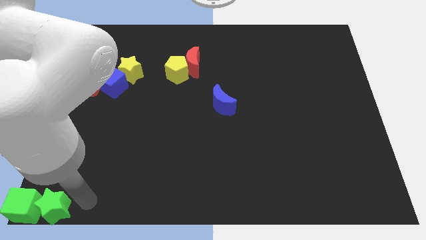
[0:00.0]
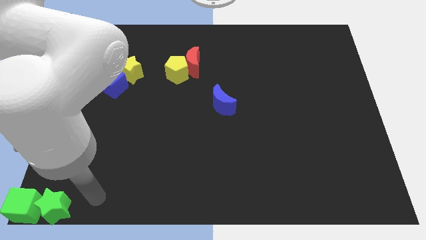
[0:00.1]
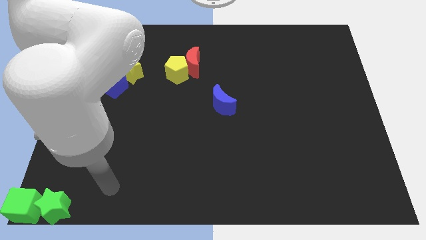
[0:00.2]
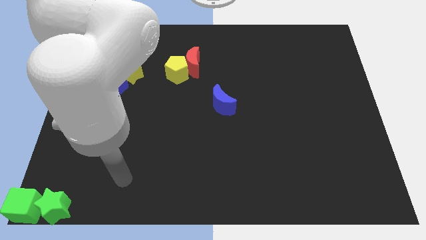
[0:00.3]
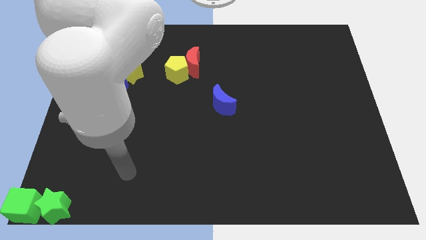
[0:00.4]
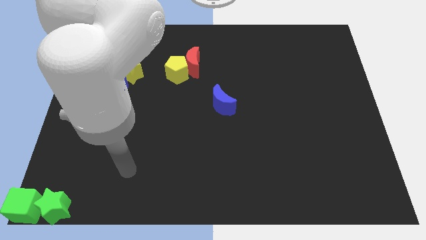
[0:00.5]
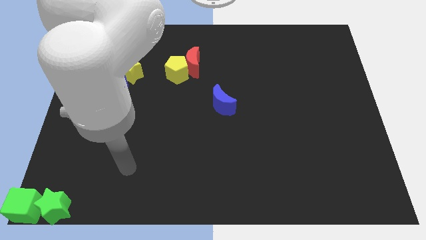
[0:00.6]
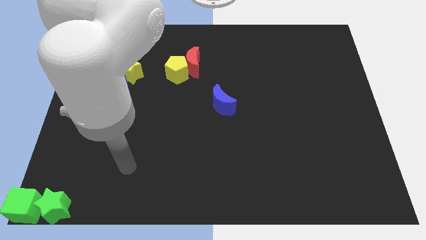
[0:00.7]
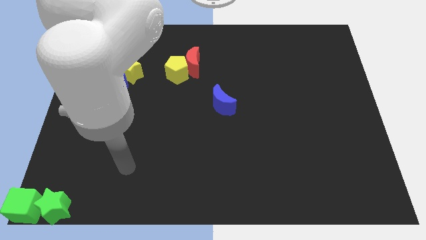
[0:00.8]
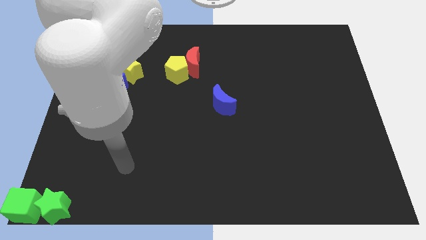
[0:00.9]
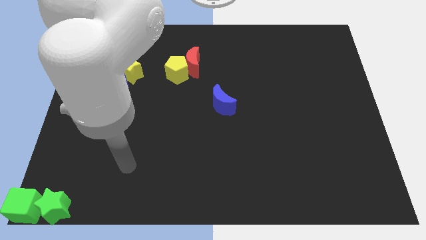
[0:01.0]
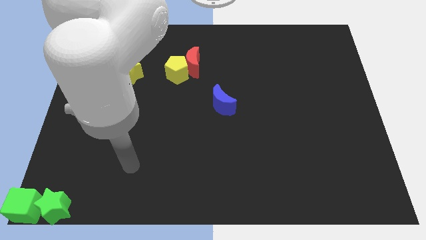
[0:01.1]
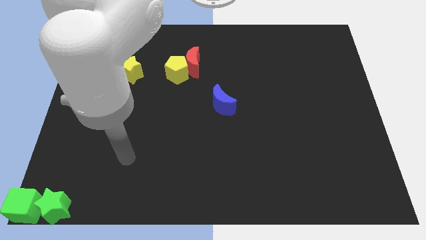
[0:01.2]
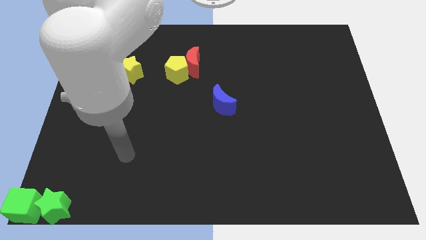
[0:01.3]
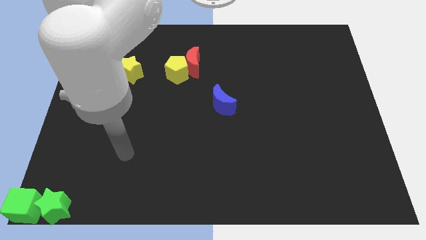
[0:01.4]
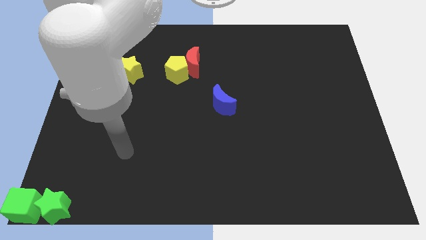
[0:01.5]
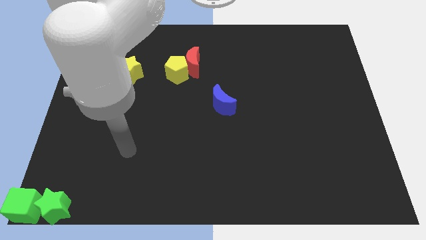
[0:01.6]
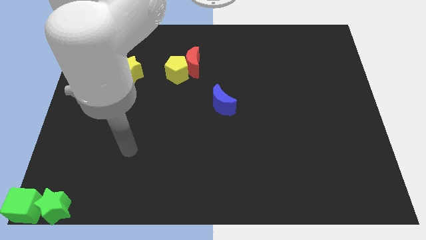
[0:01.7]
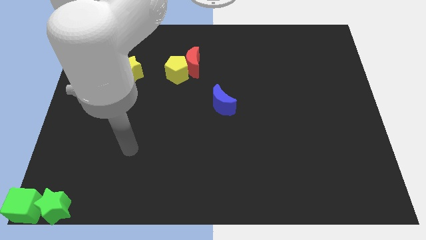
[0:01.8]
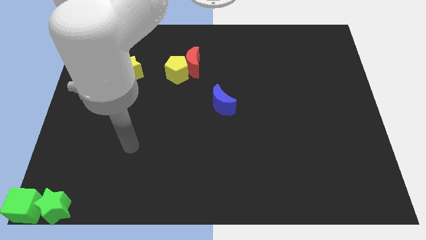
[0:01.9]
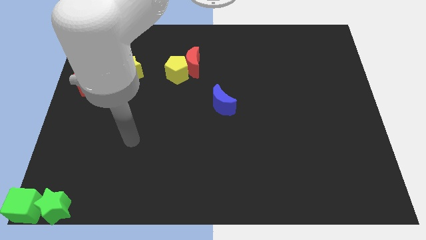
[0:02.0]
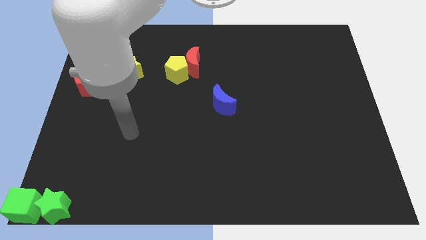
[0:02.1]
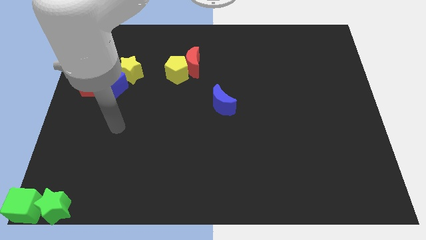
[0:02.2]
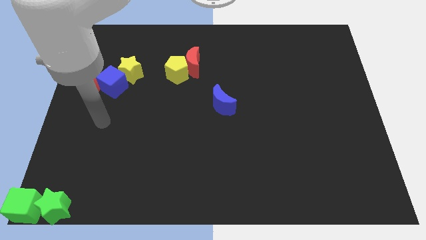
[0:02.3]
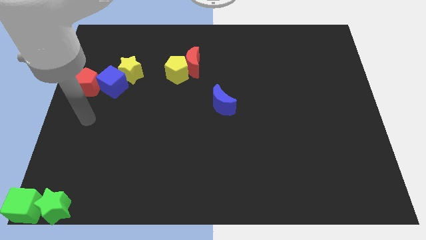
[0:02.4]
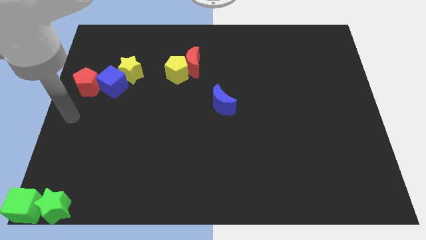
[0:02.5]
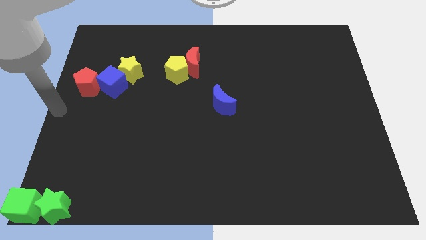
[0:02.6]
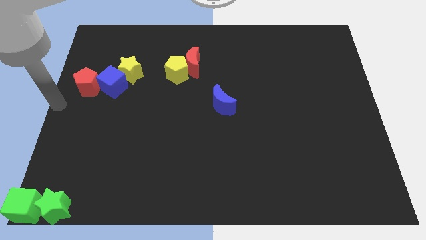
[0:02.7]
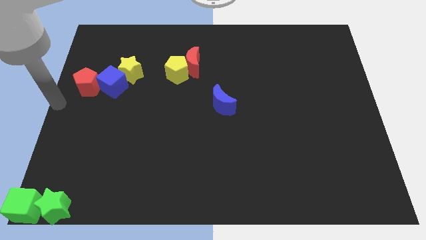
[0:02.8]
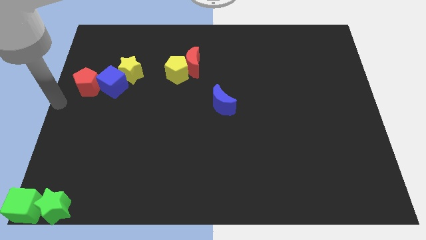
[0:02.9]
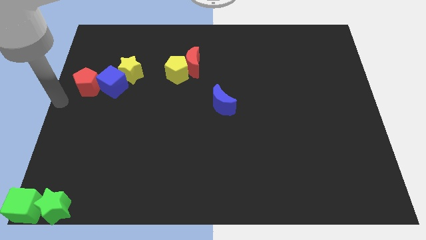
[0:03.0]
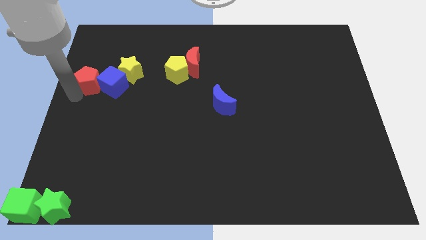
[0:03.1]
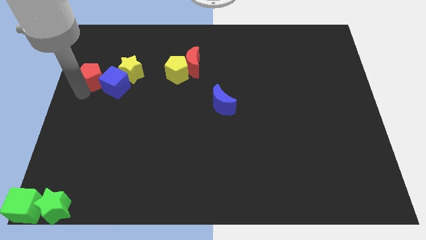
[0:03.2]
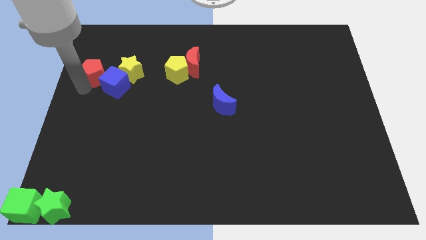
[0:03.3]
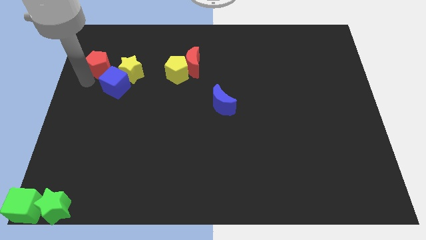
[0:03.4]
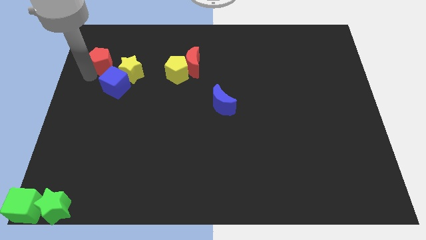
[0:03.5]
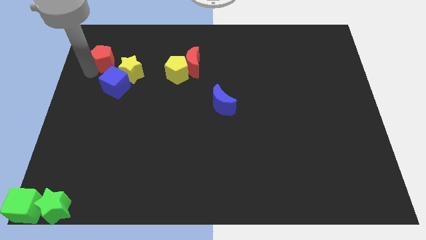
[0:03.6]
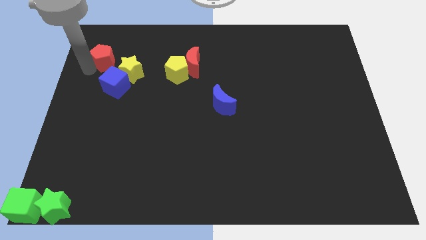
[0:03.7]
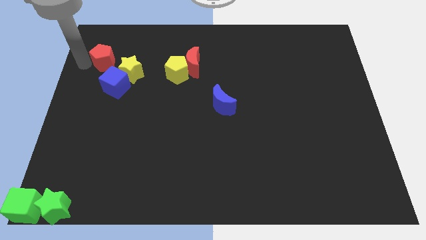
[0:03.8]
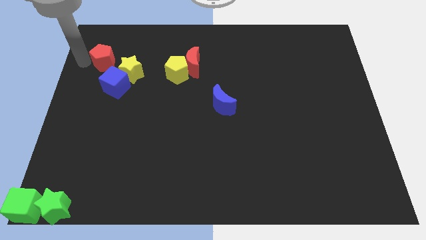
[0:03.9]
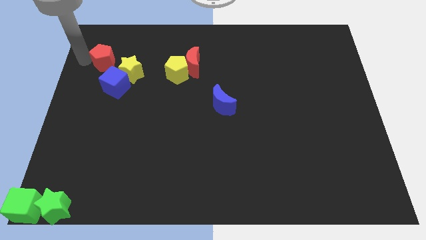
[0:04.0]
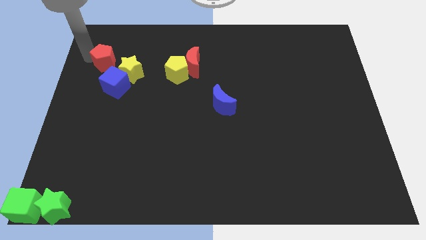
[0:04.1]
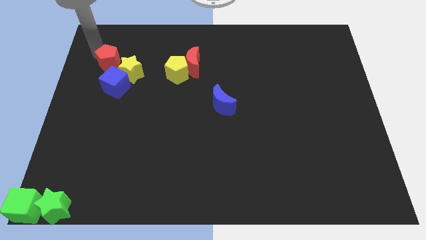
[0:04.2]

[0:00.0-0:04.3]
separate the red pentagon from the blue cube

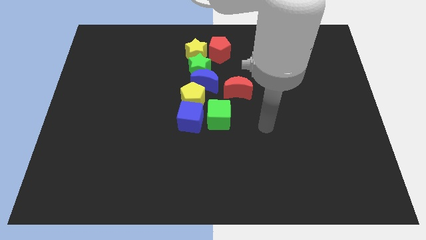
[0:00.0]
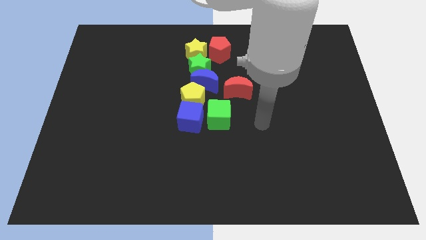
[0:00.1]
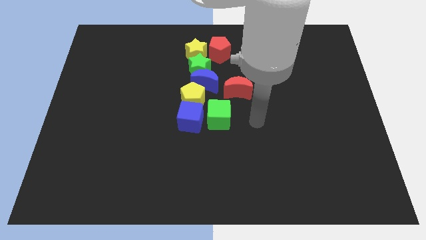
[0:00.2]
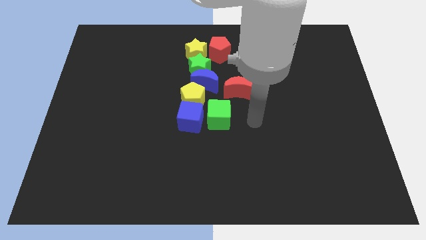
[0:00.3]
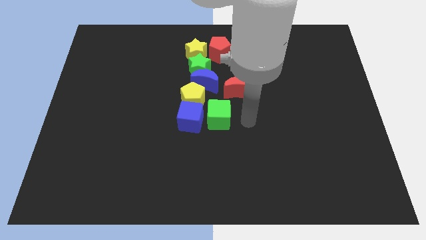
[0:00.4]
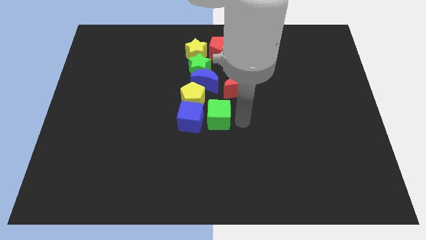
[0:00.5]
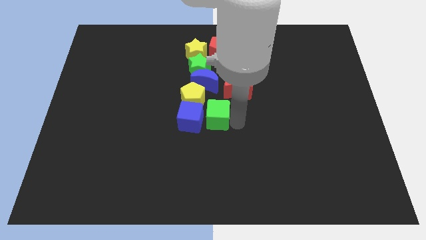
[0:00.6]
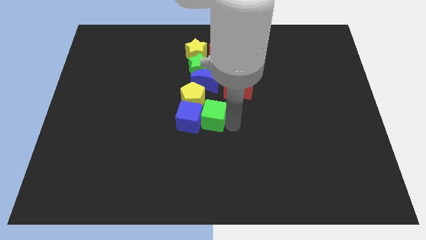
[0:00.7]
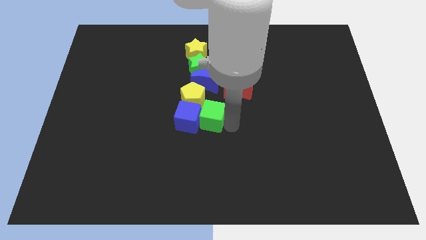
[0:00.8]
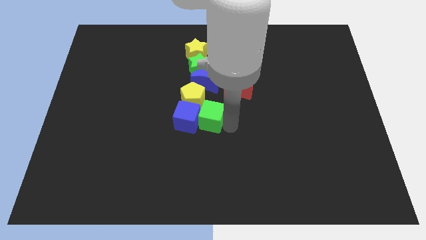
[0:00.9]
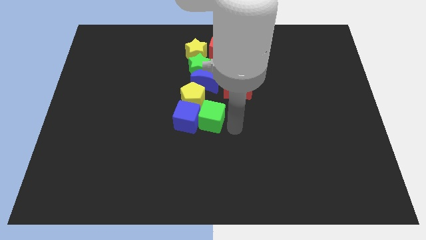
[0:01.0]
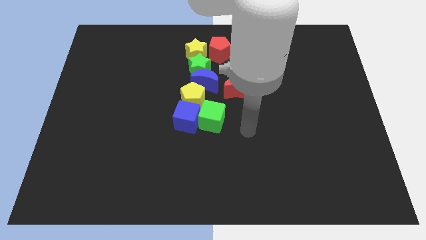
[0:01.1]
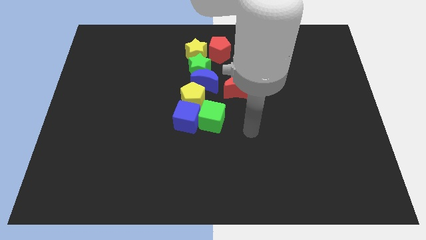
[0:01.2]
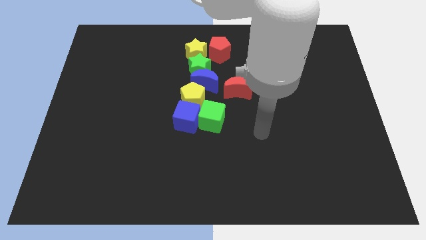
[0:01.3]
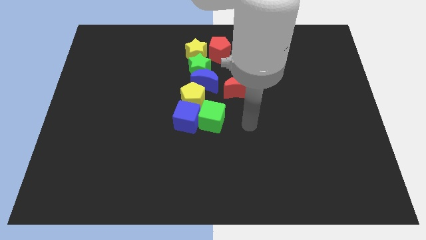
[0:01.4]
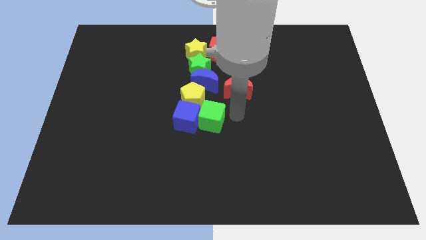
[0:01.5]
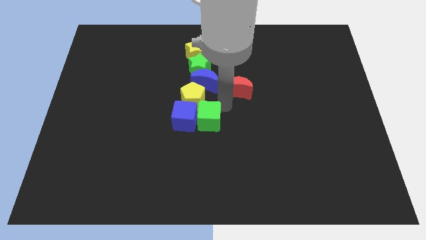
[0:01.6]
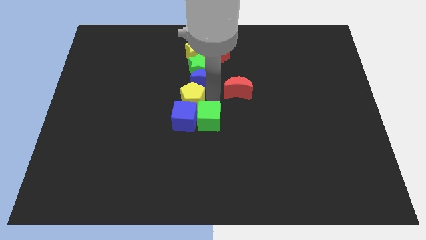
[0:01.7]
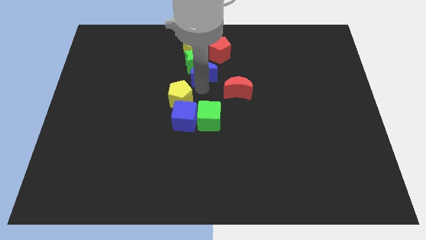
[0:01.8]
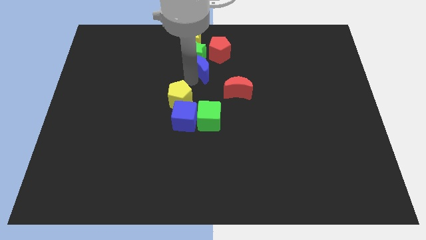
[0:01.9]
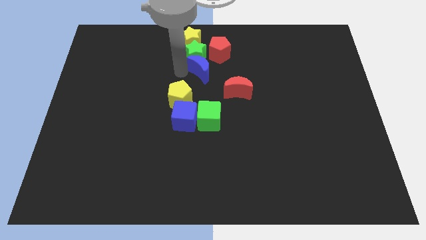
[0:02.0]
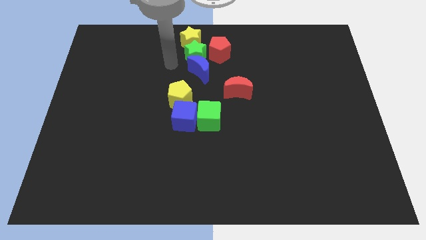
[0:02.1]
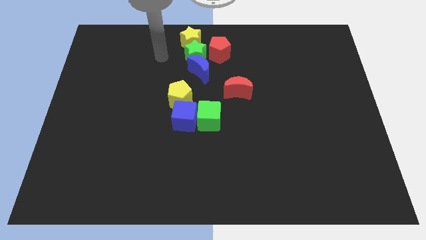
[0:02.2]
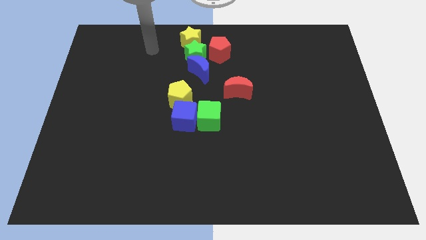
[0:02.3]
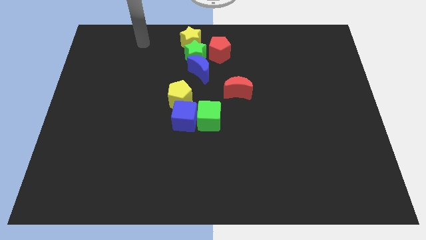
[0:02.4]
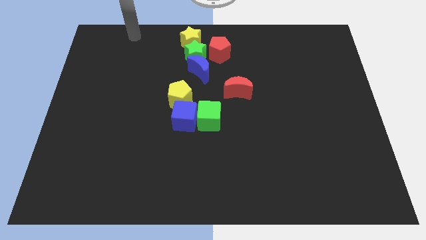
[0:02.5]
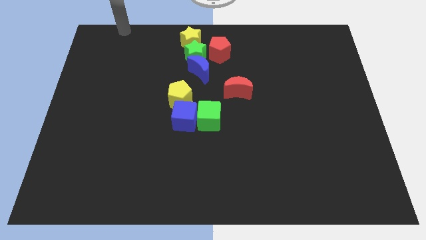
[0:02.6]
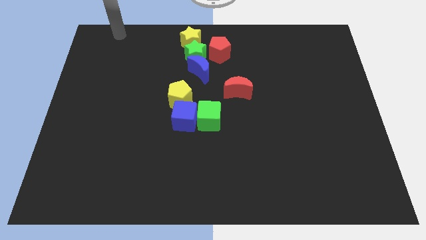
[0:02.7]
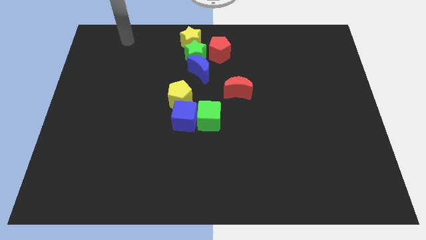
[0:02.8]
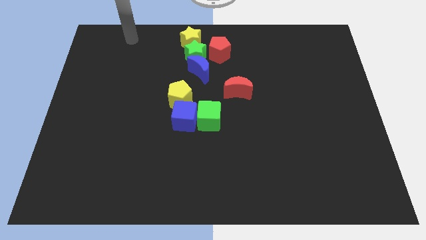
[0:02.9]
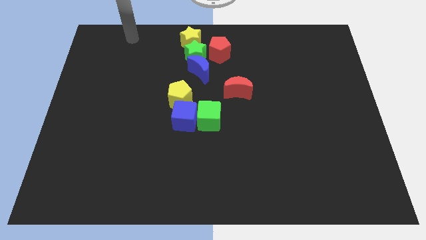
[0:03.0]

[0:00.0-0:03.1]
touch blue cube with green cube

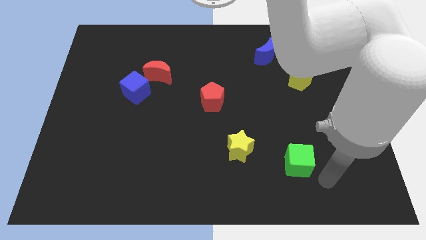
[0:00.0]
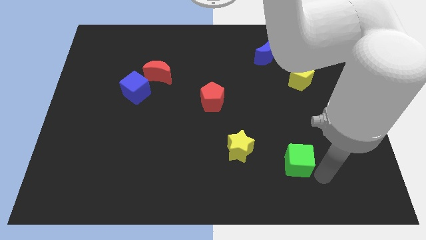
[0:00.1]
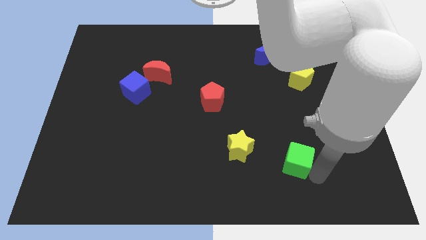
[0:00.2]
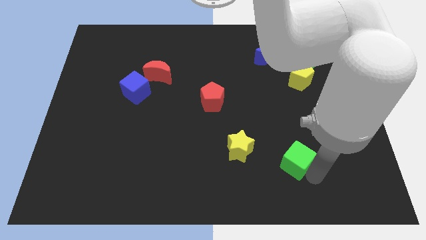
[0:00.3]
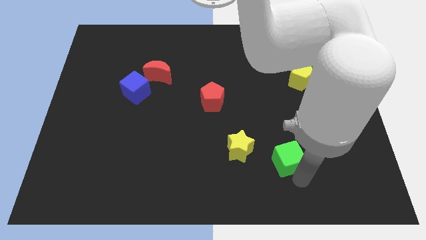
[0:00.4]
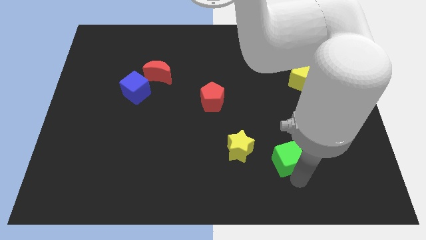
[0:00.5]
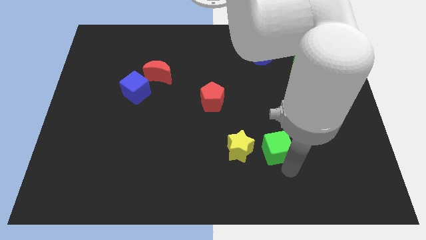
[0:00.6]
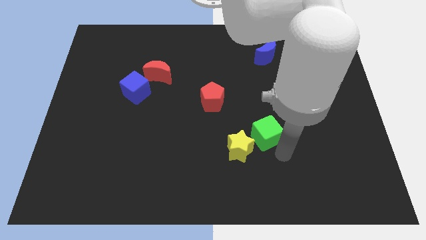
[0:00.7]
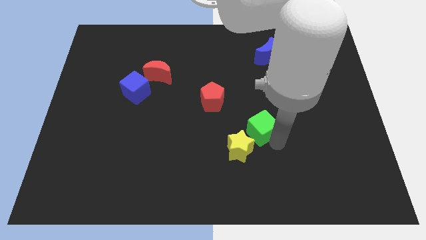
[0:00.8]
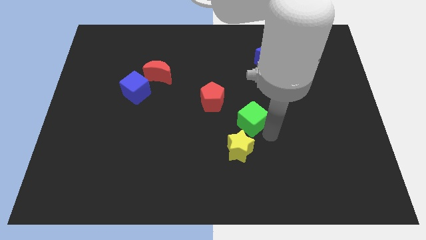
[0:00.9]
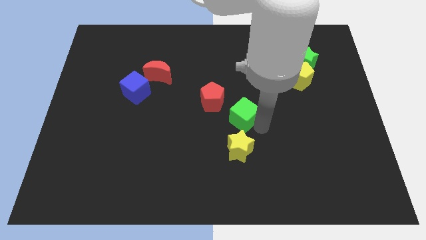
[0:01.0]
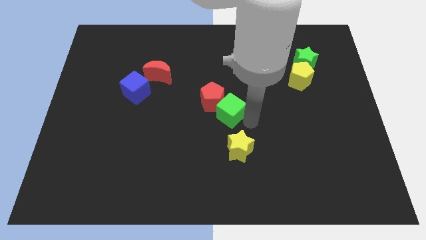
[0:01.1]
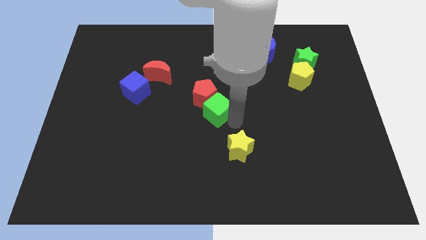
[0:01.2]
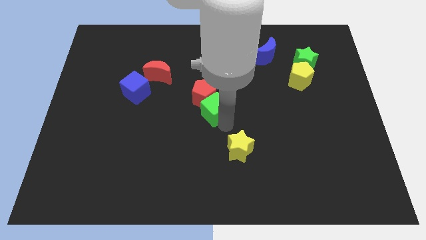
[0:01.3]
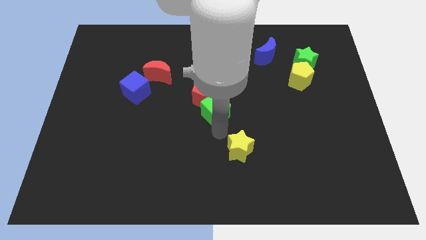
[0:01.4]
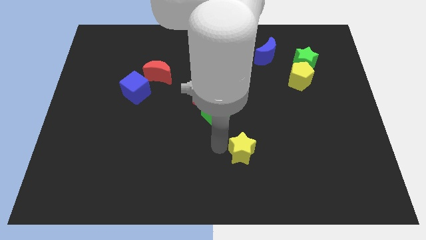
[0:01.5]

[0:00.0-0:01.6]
place the green cube to the right bottom of the red pen
